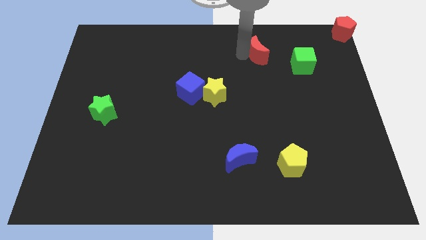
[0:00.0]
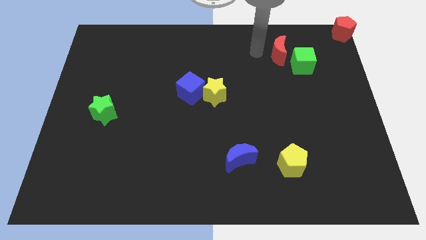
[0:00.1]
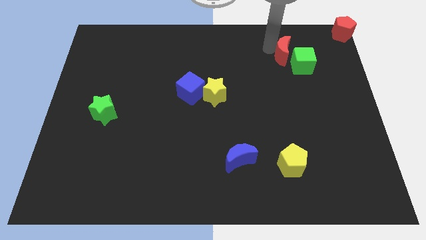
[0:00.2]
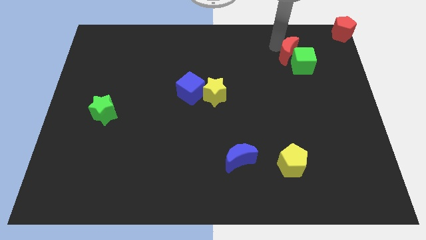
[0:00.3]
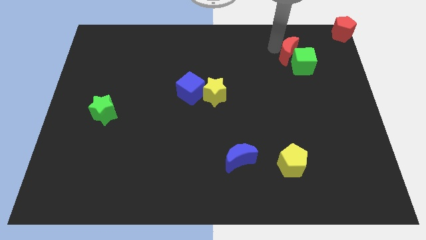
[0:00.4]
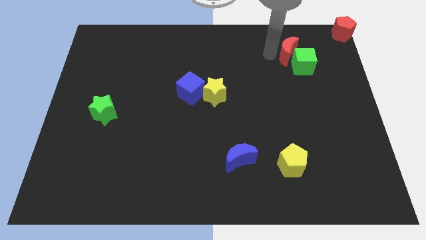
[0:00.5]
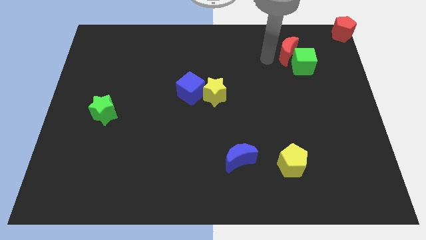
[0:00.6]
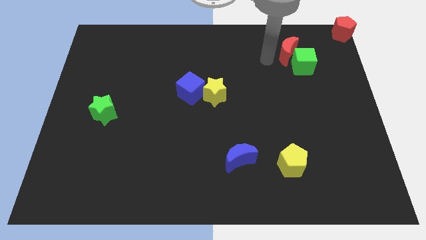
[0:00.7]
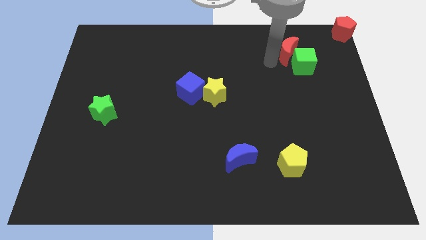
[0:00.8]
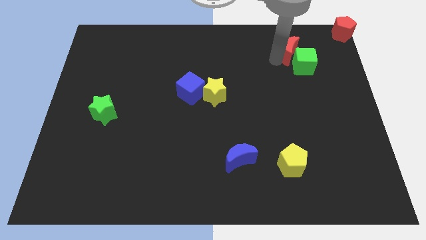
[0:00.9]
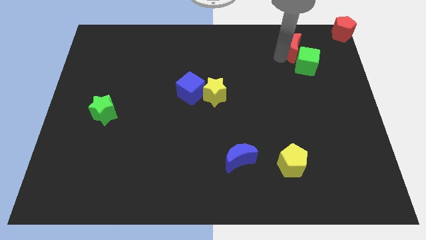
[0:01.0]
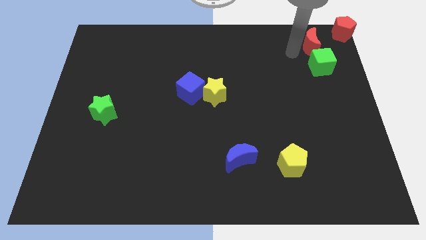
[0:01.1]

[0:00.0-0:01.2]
push the red crescent into the green cube

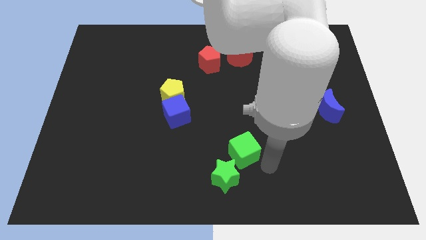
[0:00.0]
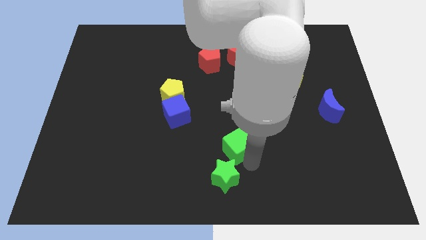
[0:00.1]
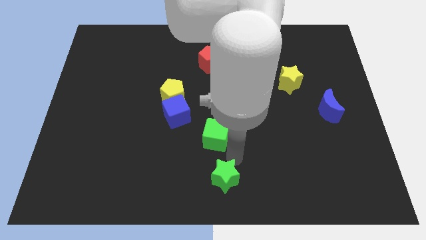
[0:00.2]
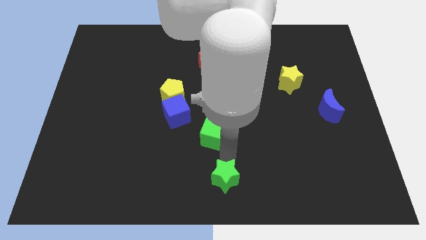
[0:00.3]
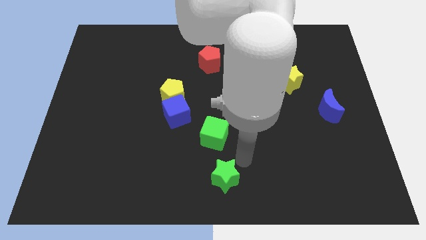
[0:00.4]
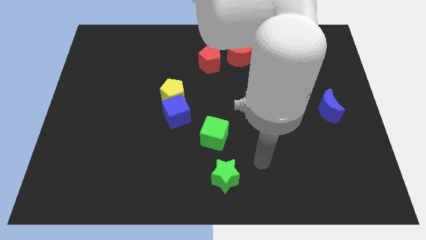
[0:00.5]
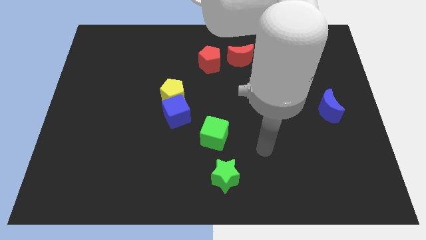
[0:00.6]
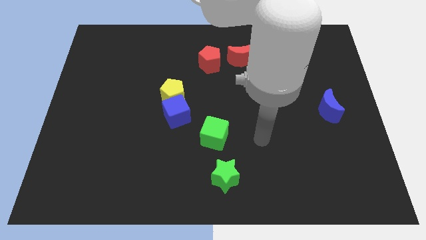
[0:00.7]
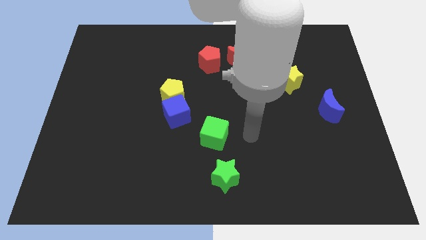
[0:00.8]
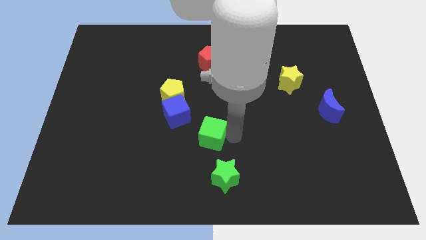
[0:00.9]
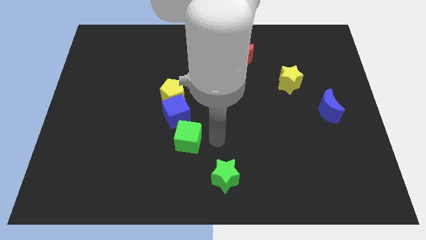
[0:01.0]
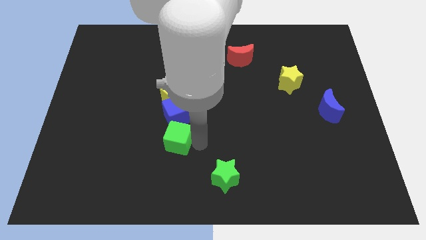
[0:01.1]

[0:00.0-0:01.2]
place green cube to the bottom of blue cube

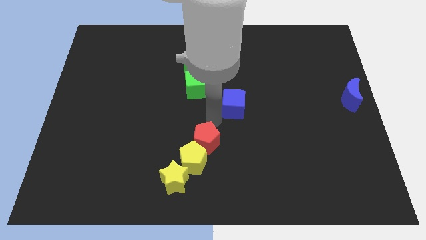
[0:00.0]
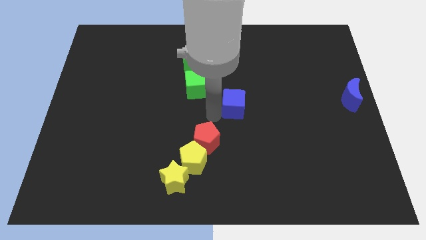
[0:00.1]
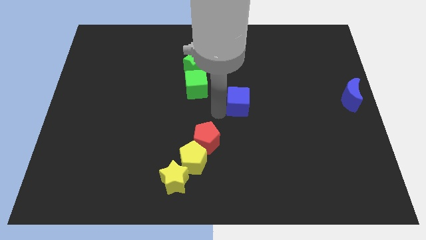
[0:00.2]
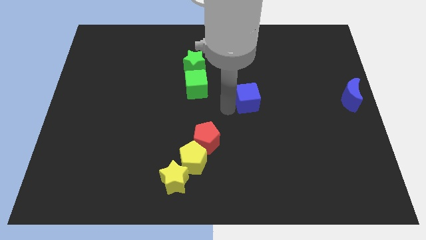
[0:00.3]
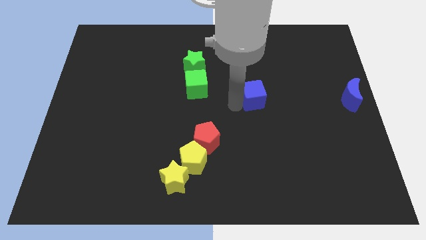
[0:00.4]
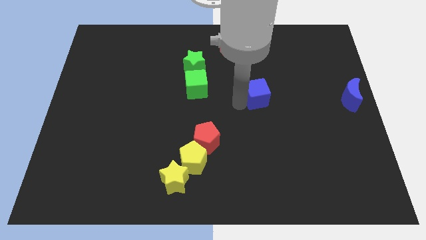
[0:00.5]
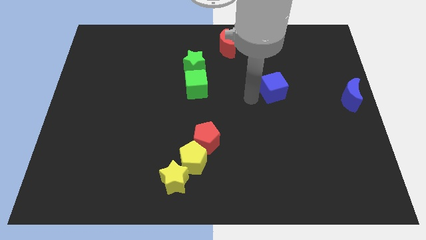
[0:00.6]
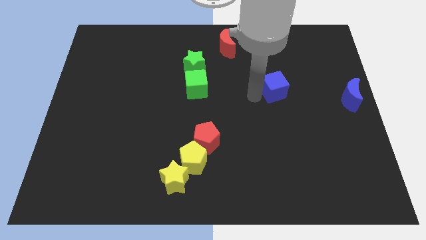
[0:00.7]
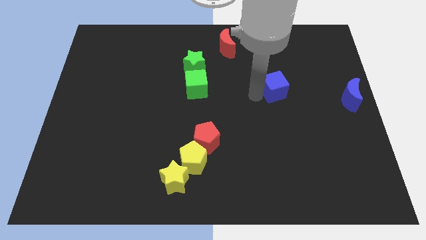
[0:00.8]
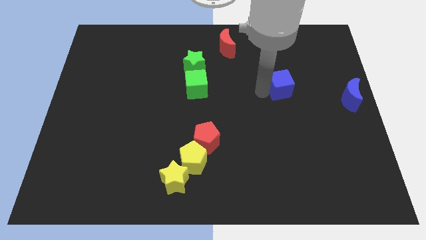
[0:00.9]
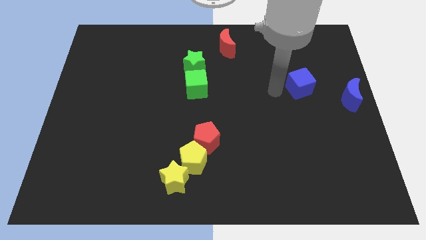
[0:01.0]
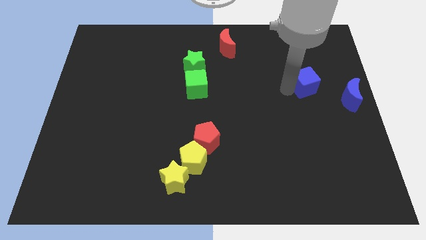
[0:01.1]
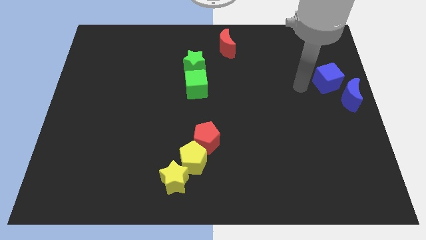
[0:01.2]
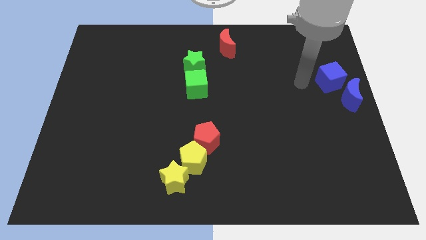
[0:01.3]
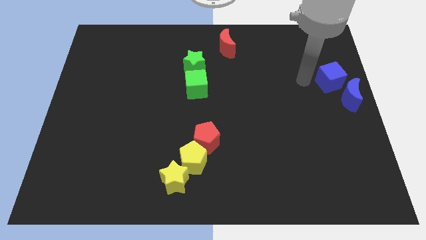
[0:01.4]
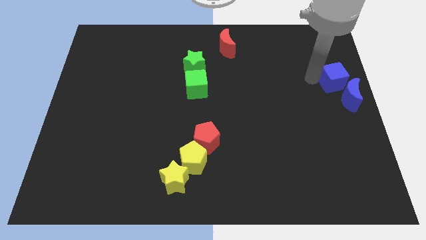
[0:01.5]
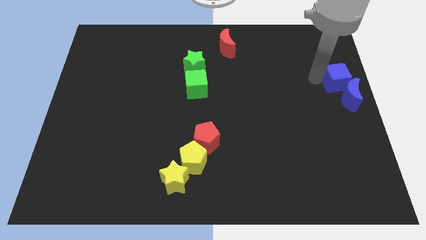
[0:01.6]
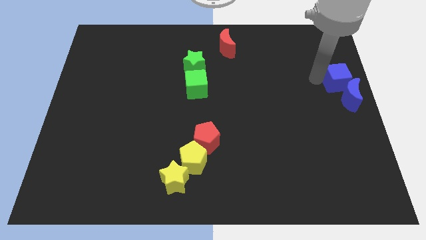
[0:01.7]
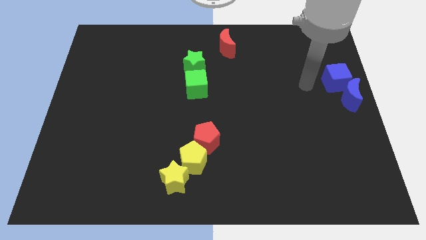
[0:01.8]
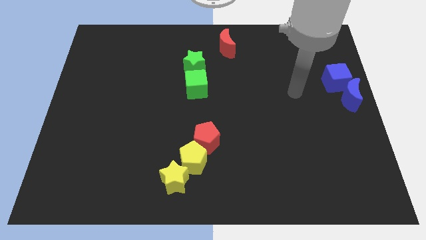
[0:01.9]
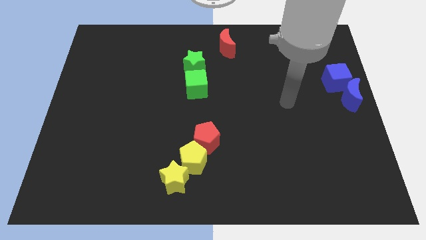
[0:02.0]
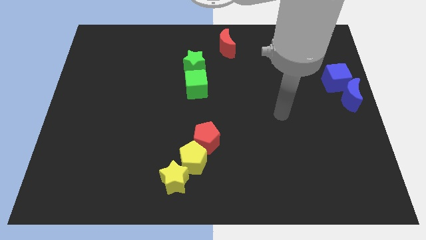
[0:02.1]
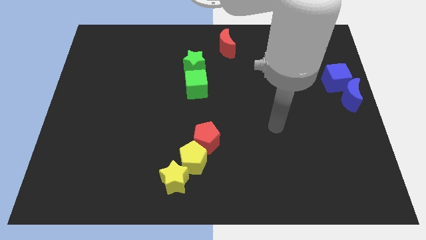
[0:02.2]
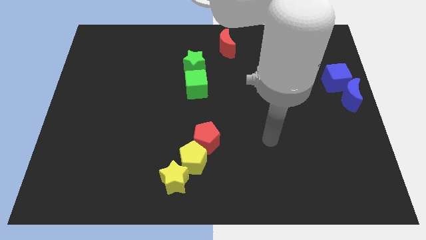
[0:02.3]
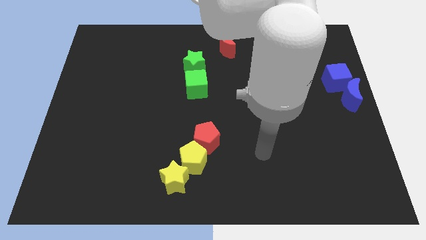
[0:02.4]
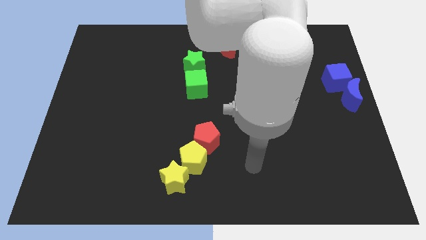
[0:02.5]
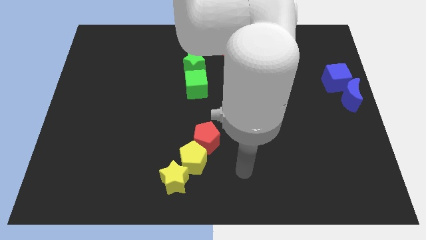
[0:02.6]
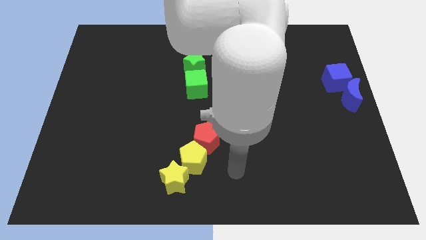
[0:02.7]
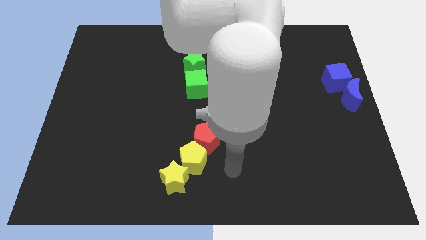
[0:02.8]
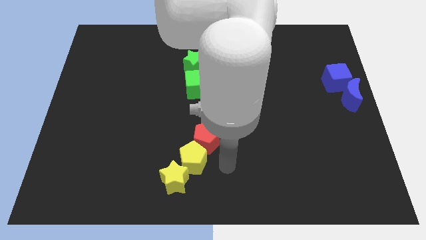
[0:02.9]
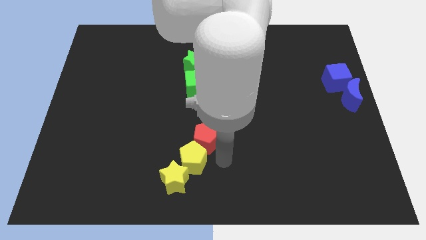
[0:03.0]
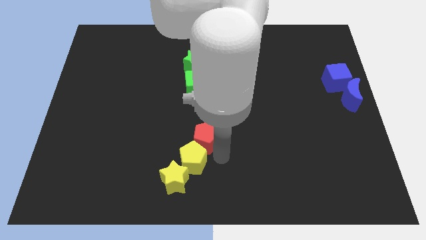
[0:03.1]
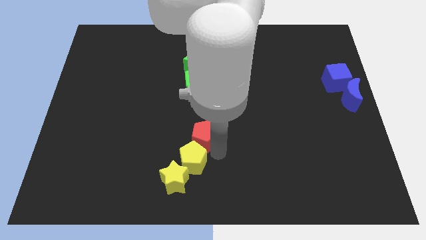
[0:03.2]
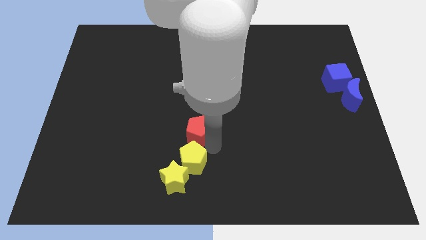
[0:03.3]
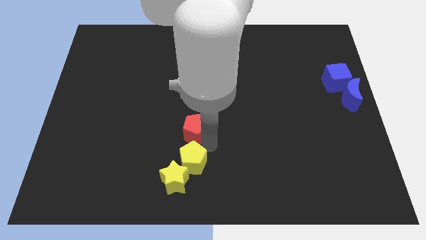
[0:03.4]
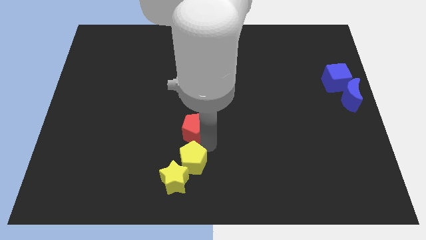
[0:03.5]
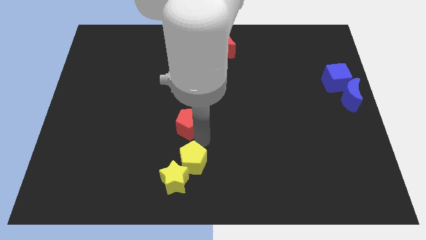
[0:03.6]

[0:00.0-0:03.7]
push red pentagon above yellow pentagon

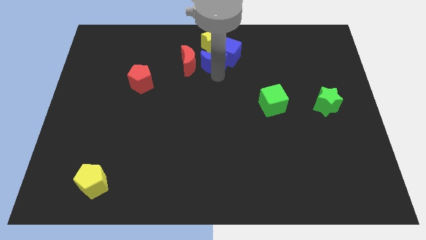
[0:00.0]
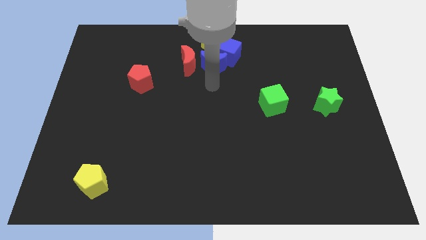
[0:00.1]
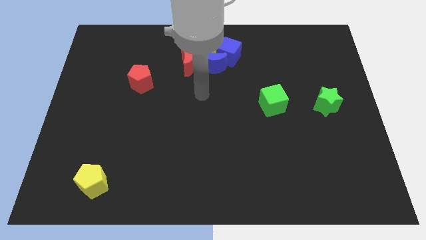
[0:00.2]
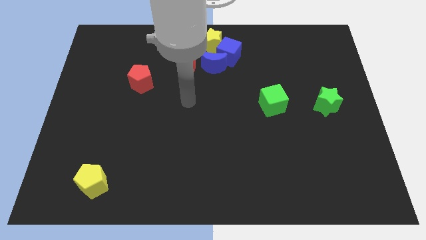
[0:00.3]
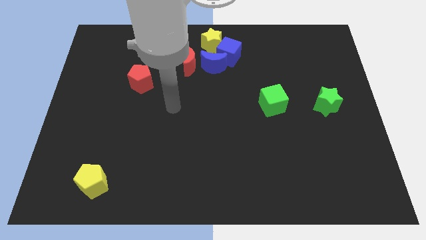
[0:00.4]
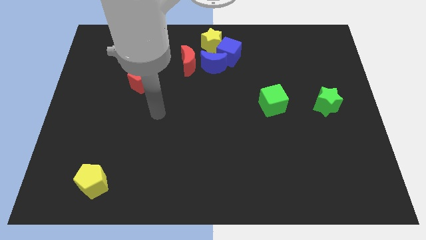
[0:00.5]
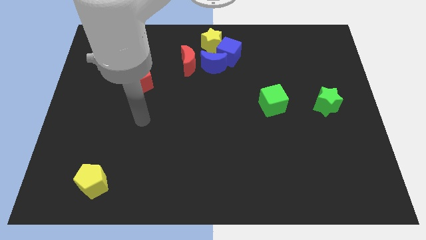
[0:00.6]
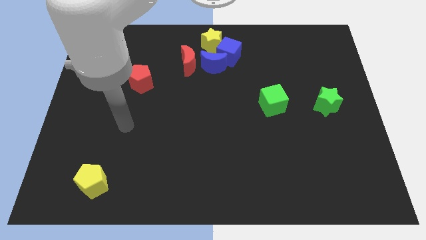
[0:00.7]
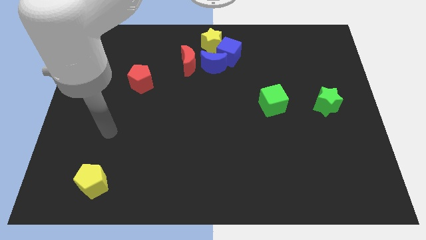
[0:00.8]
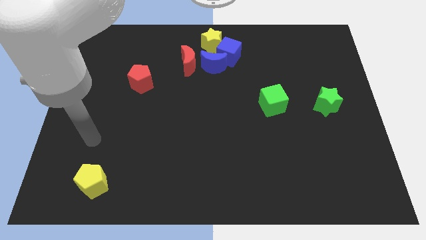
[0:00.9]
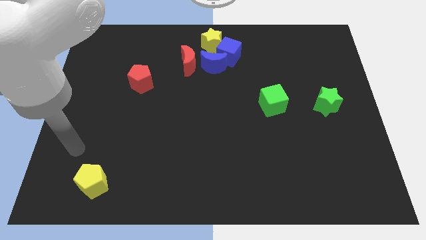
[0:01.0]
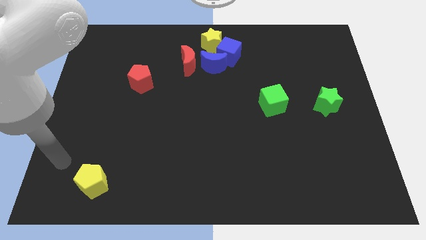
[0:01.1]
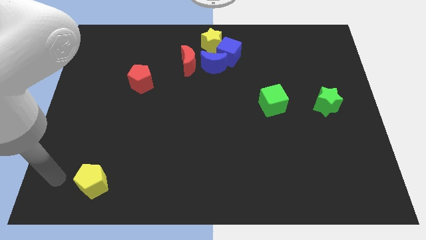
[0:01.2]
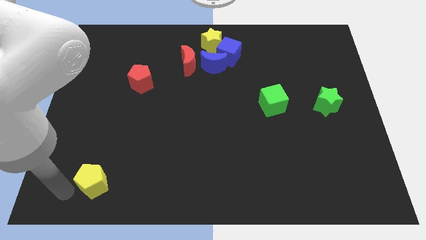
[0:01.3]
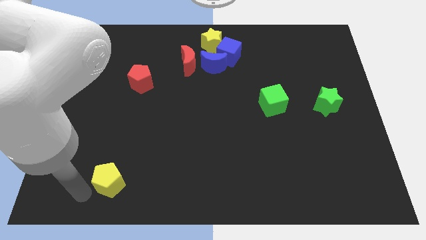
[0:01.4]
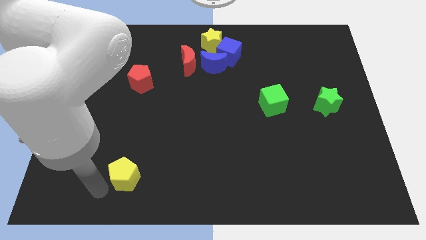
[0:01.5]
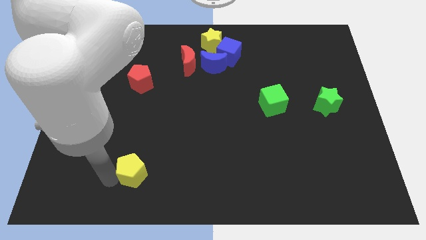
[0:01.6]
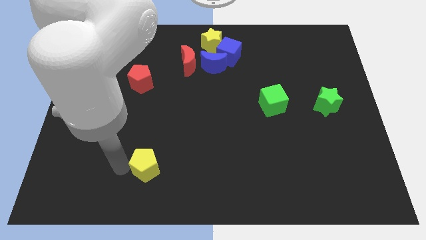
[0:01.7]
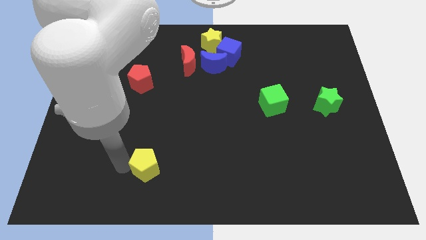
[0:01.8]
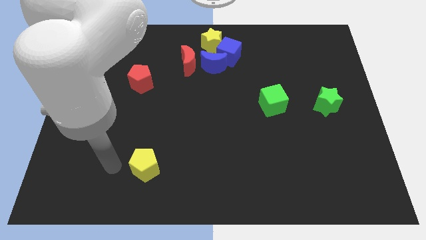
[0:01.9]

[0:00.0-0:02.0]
move the yellow pentagon slightly to the right

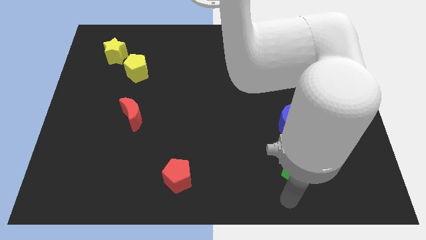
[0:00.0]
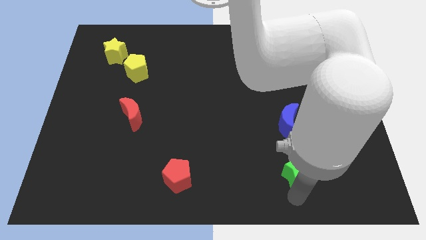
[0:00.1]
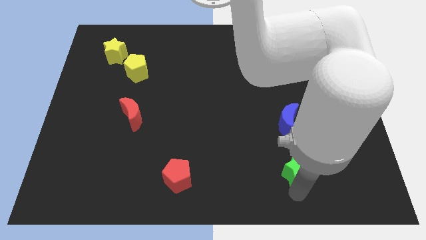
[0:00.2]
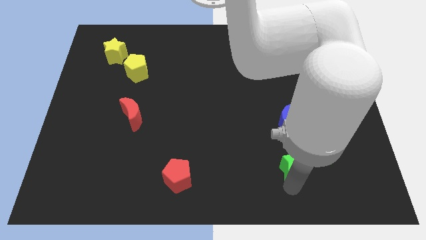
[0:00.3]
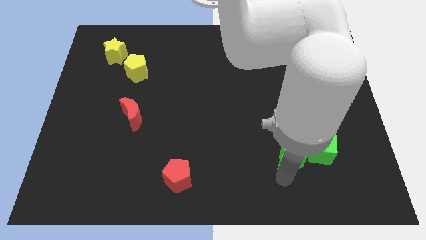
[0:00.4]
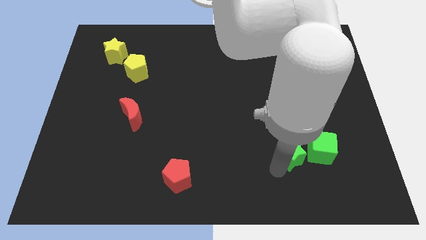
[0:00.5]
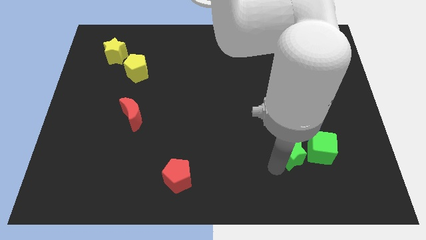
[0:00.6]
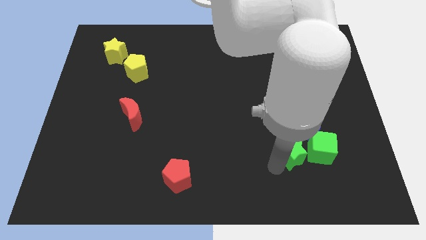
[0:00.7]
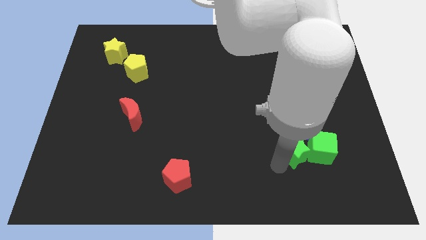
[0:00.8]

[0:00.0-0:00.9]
push the green star left to the green cube
